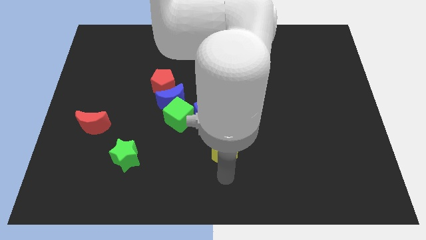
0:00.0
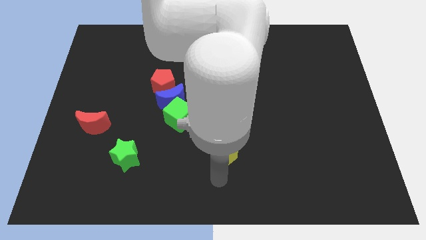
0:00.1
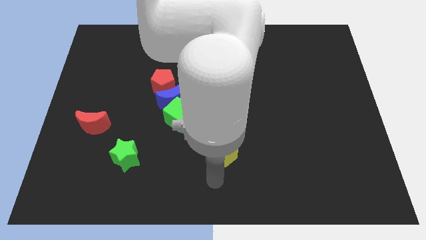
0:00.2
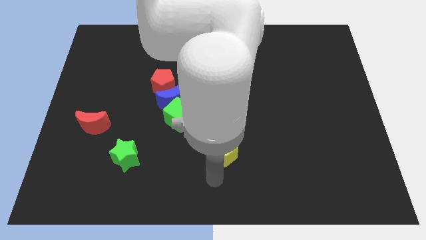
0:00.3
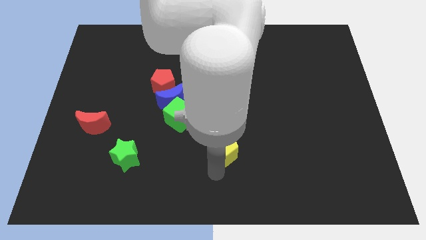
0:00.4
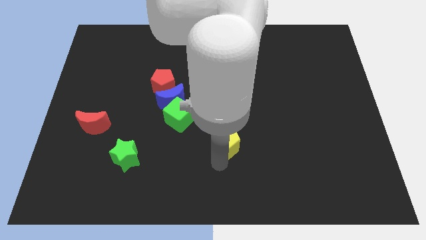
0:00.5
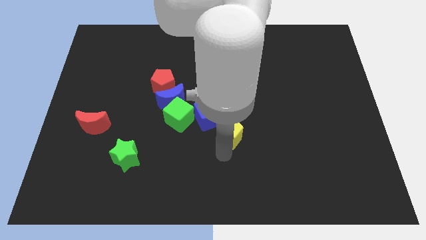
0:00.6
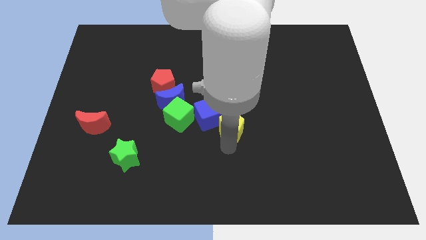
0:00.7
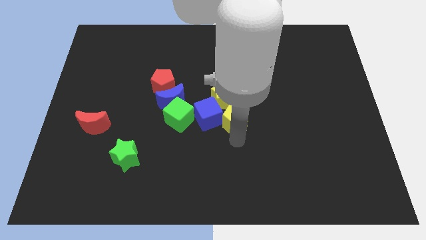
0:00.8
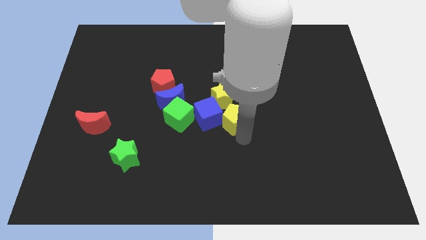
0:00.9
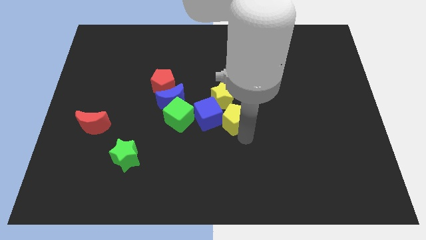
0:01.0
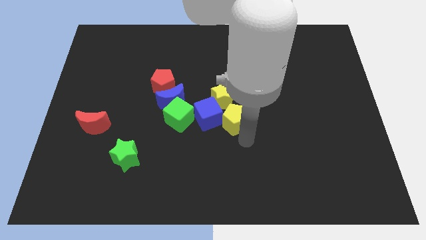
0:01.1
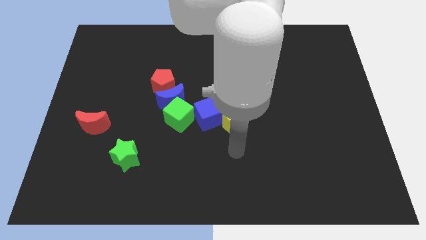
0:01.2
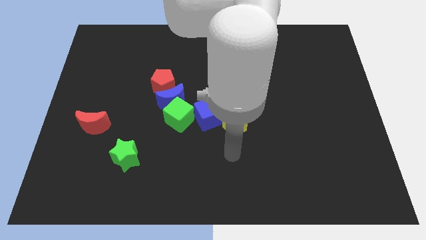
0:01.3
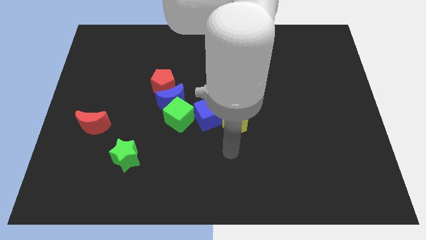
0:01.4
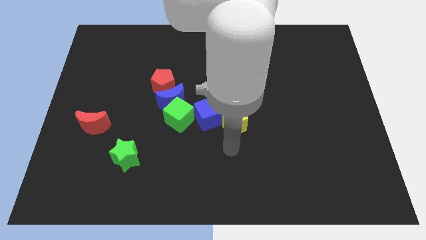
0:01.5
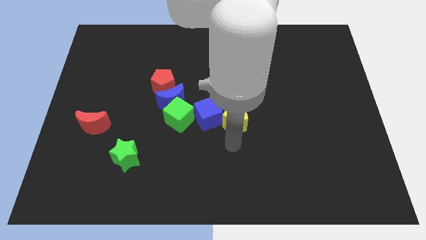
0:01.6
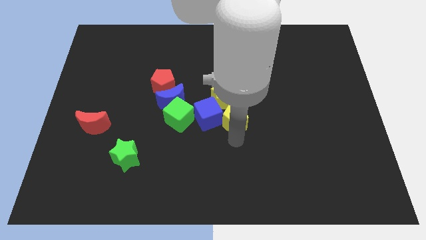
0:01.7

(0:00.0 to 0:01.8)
move the yellow pentagon right to the blue cube

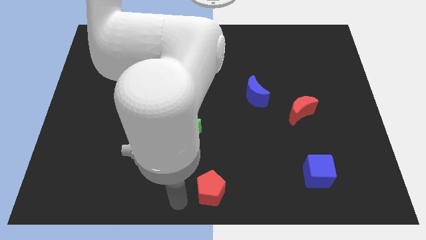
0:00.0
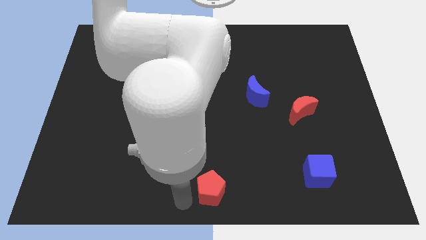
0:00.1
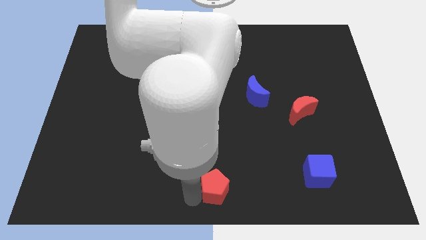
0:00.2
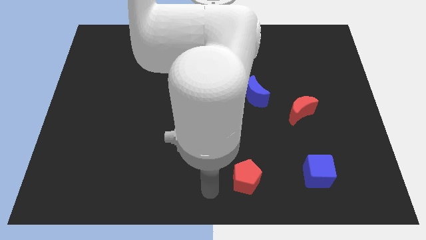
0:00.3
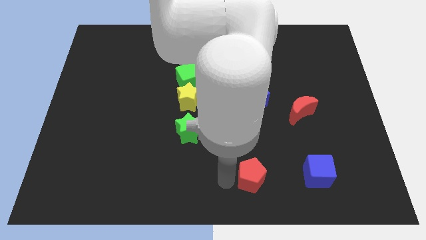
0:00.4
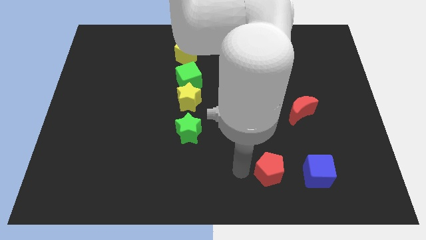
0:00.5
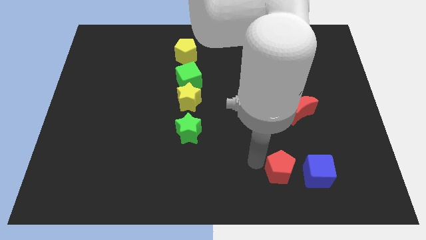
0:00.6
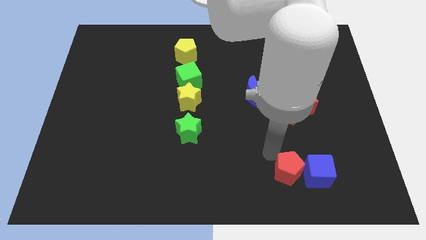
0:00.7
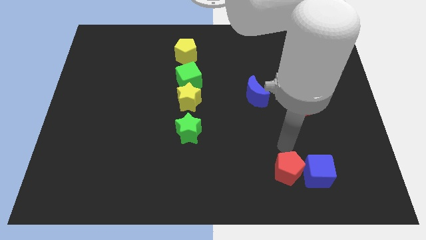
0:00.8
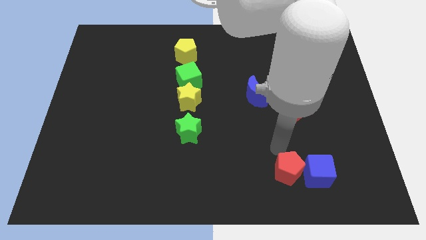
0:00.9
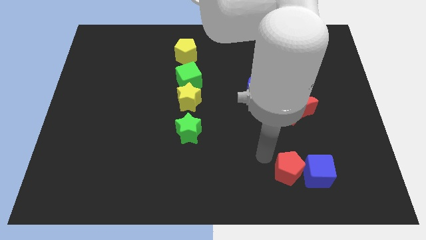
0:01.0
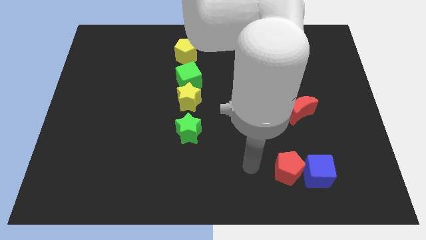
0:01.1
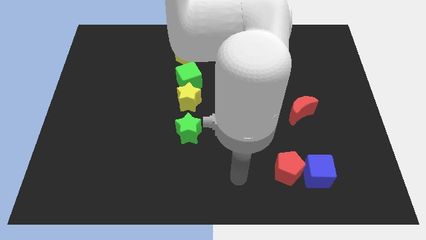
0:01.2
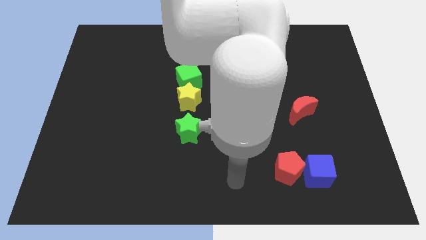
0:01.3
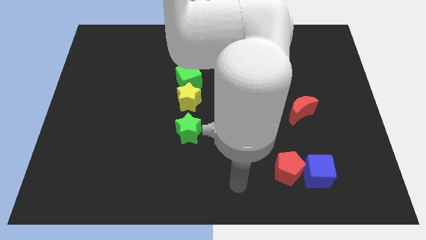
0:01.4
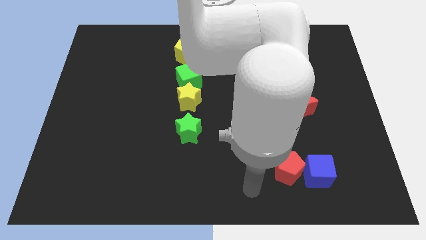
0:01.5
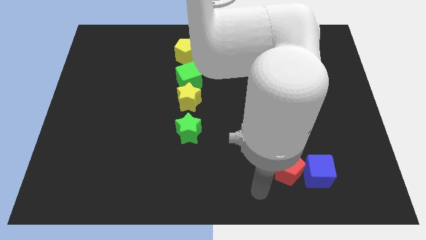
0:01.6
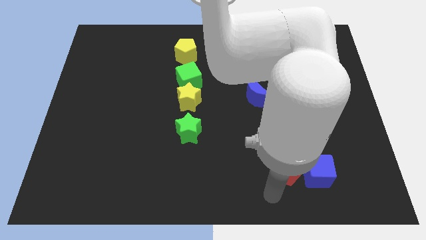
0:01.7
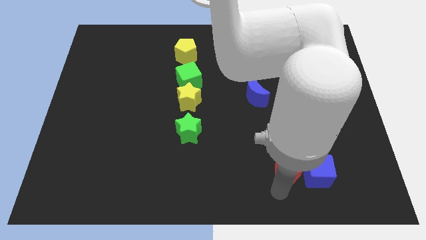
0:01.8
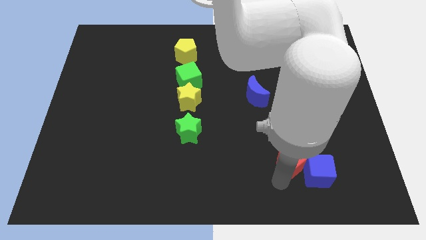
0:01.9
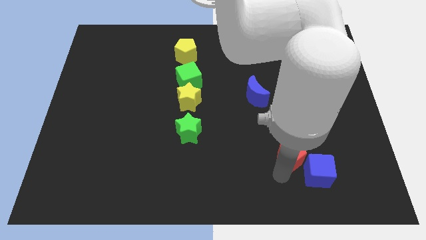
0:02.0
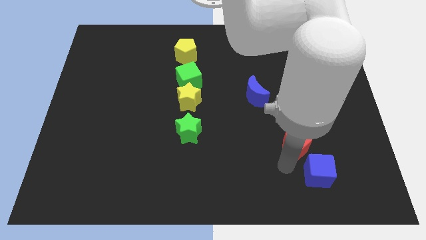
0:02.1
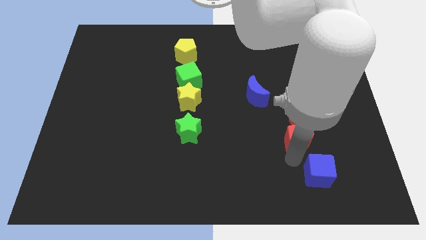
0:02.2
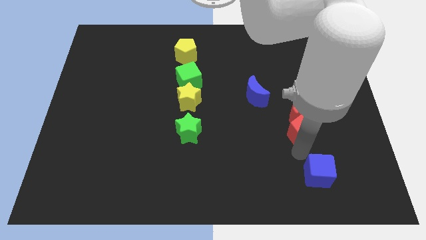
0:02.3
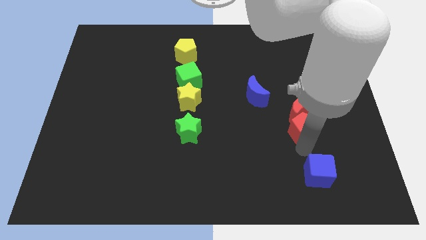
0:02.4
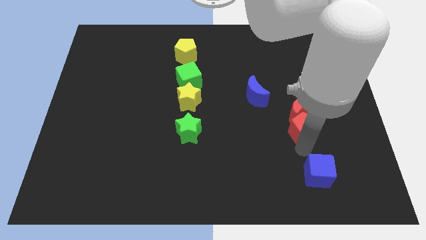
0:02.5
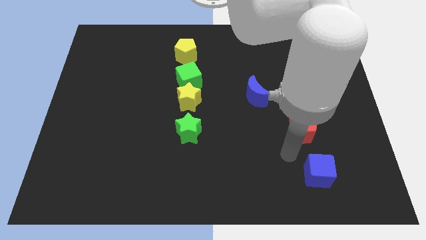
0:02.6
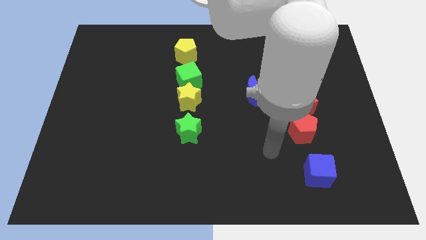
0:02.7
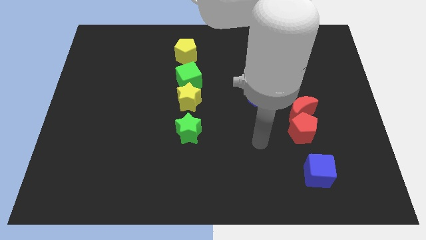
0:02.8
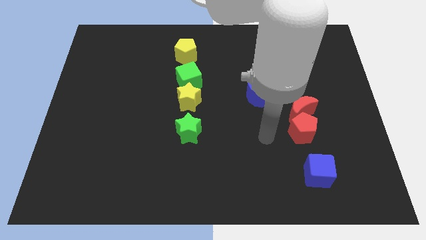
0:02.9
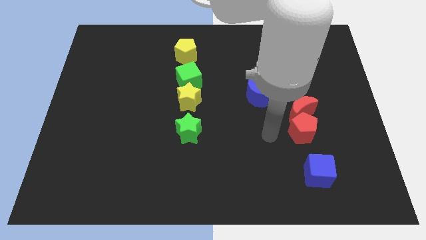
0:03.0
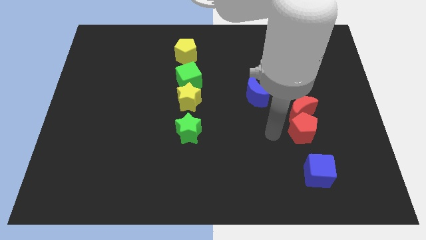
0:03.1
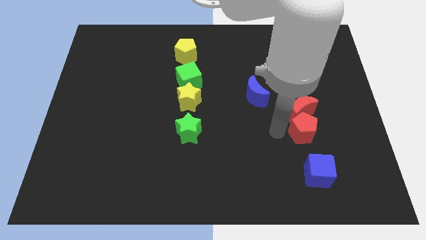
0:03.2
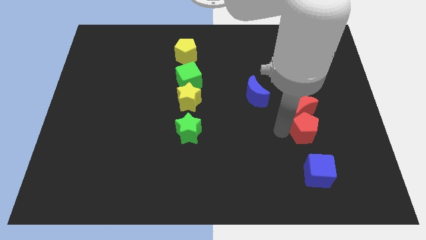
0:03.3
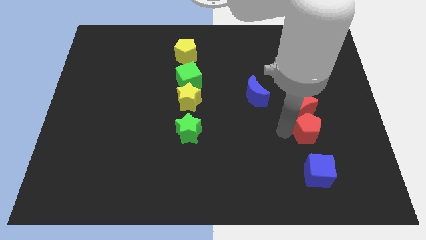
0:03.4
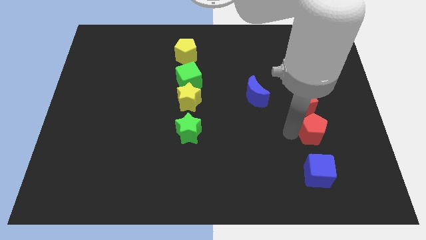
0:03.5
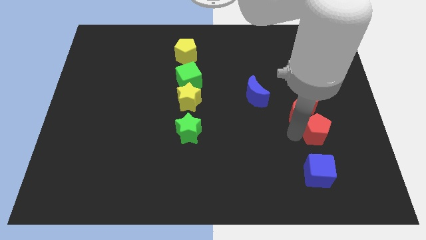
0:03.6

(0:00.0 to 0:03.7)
place the red pentagon in between blue cube and red moon

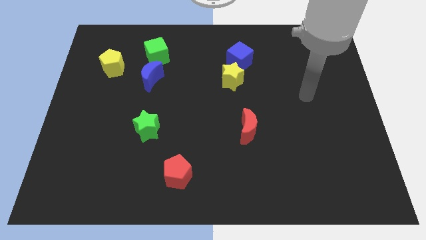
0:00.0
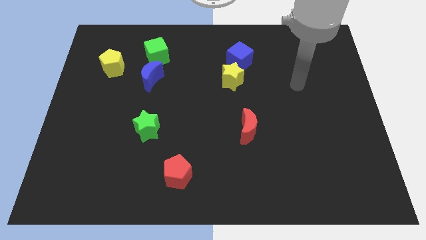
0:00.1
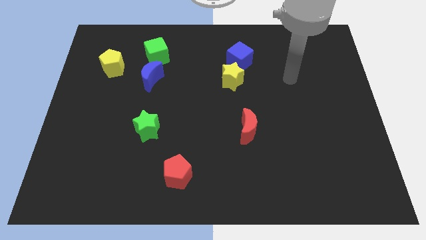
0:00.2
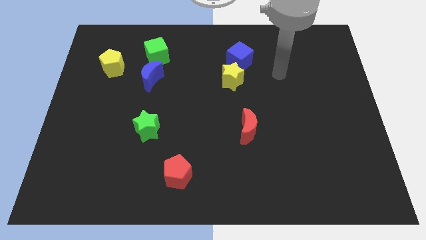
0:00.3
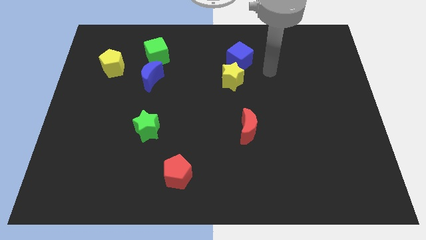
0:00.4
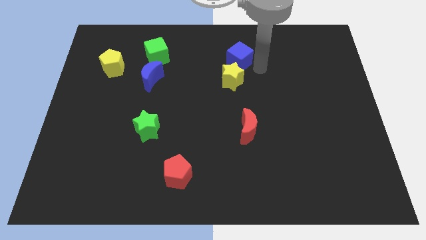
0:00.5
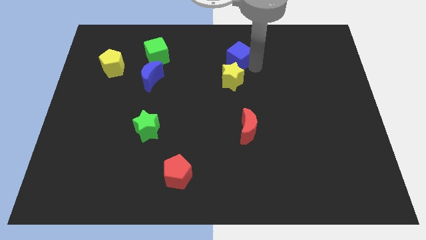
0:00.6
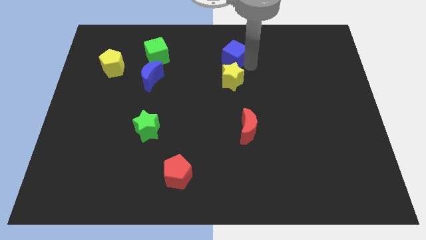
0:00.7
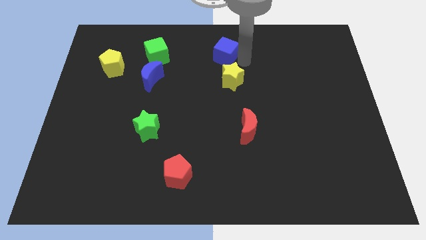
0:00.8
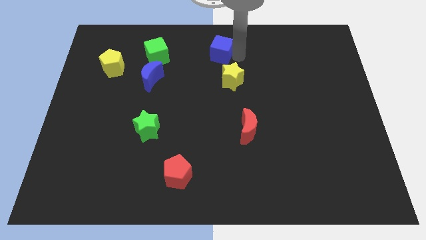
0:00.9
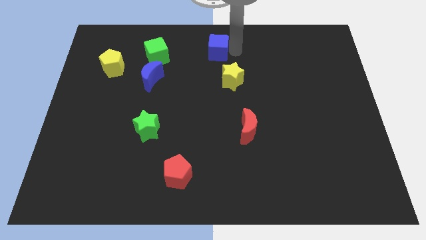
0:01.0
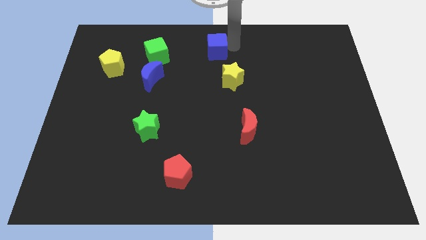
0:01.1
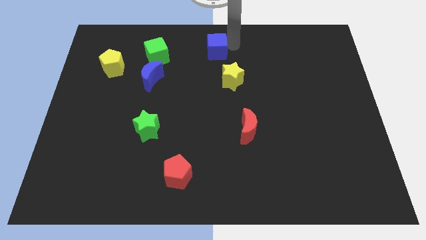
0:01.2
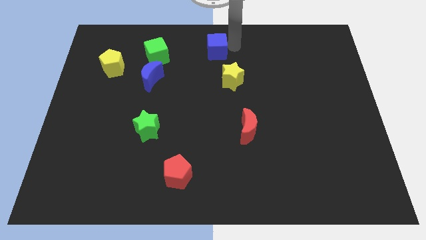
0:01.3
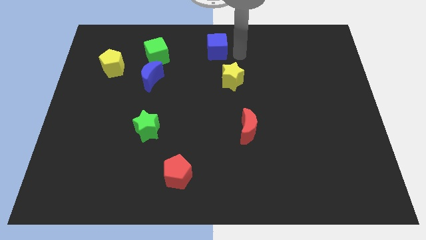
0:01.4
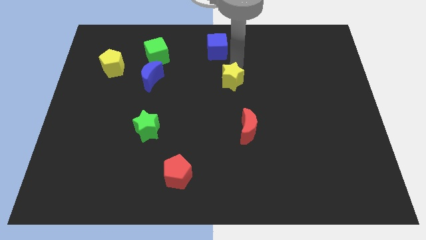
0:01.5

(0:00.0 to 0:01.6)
place the blue cube above the yellow star

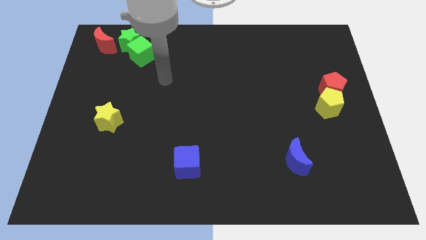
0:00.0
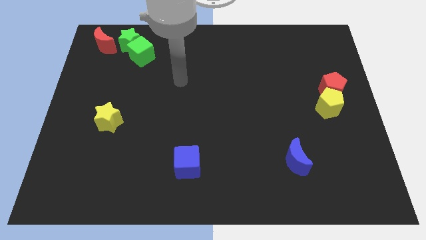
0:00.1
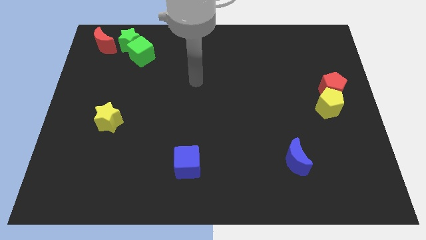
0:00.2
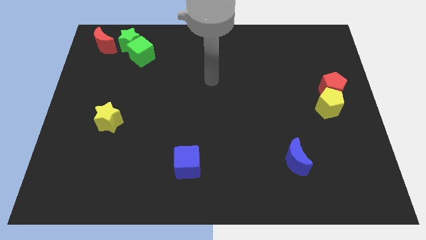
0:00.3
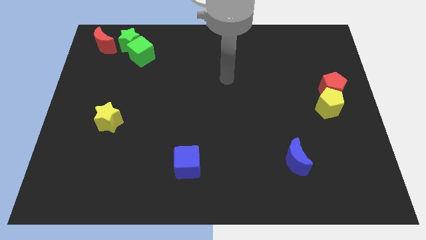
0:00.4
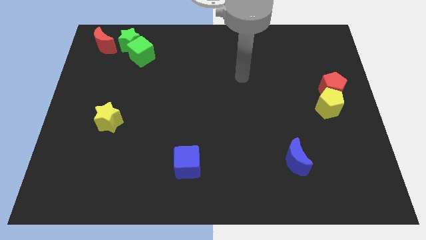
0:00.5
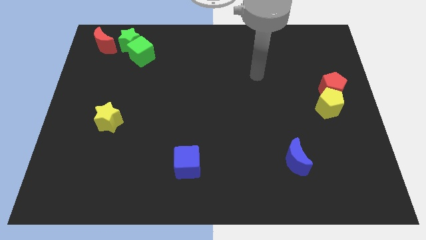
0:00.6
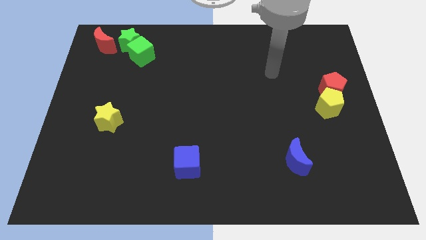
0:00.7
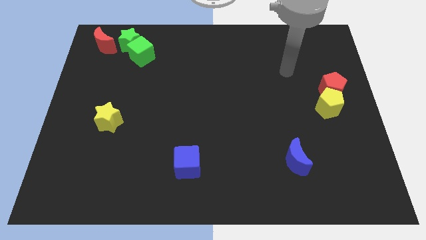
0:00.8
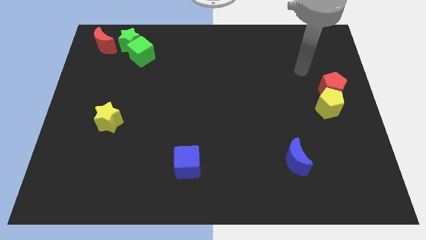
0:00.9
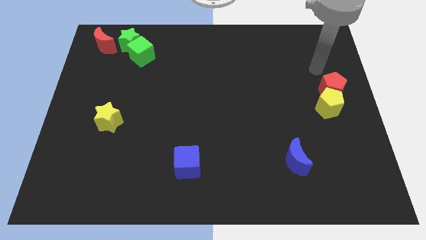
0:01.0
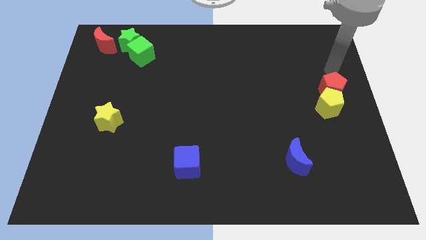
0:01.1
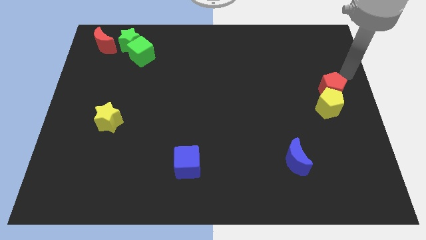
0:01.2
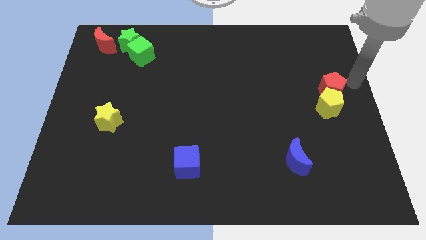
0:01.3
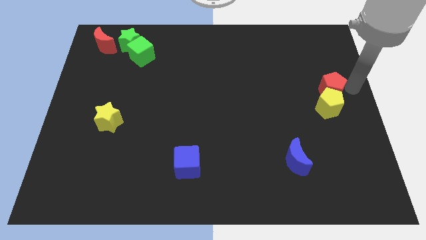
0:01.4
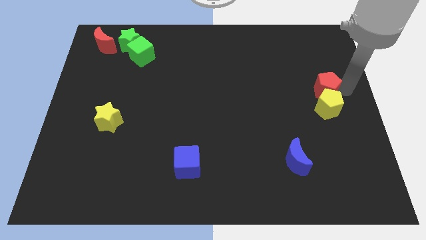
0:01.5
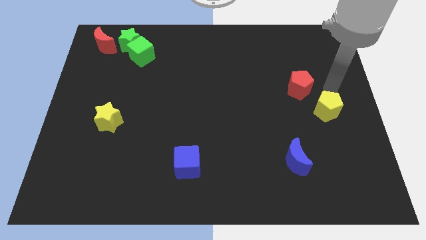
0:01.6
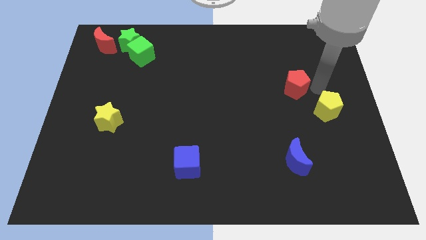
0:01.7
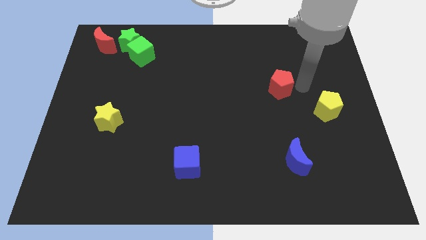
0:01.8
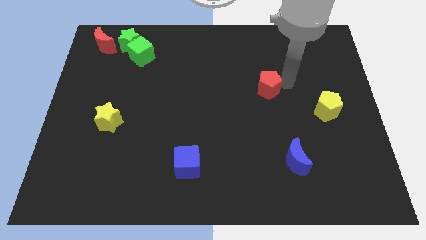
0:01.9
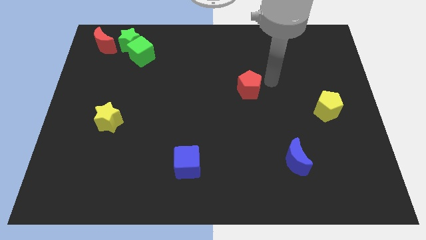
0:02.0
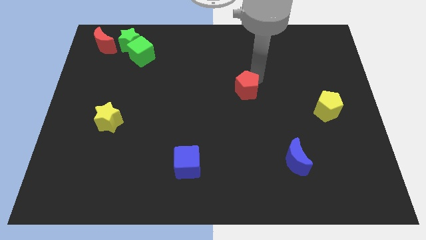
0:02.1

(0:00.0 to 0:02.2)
separate the red pentagon towards center
